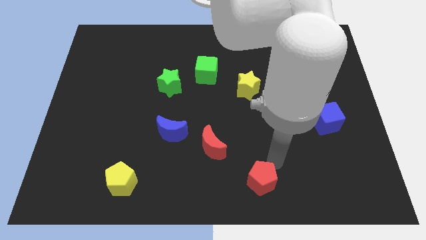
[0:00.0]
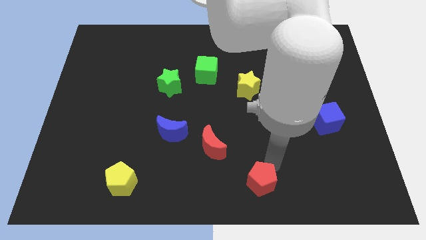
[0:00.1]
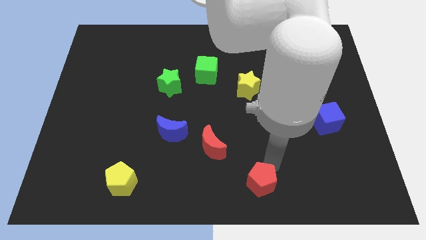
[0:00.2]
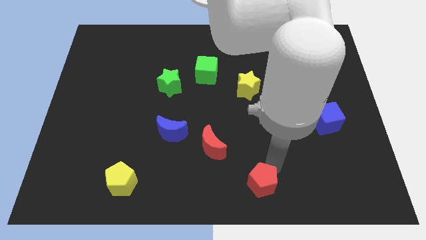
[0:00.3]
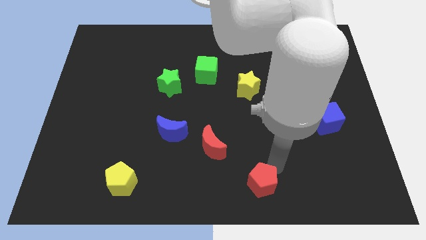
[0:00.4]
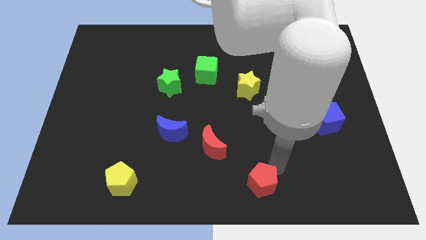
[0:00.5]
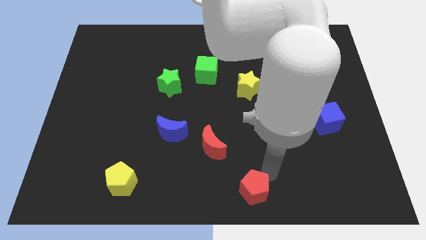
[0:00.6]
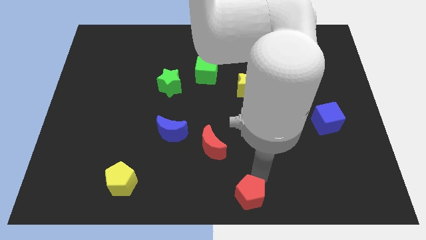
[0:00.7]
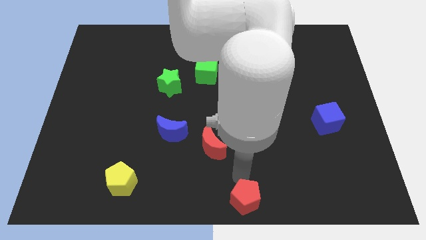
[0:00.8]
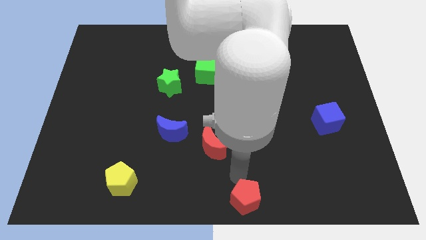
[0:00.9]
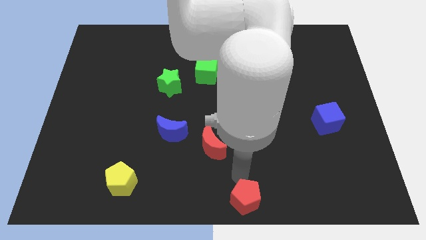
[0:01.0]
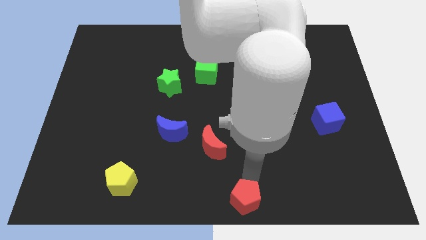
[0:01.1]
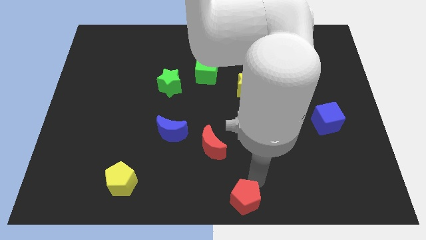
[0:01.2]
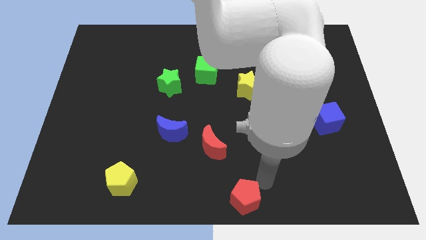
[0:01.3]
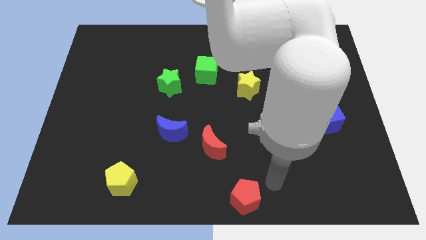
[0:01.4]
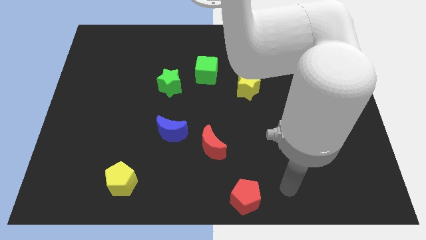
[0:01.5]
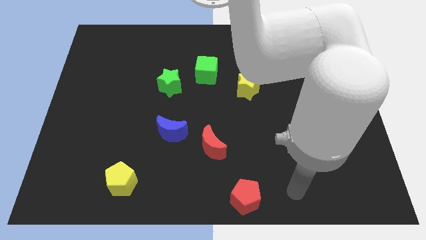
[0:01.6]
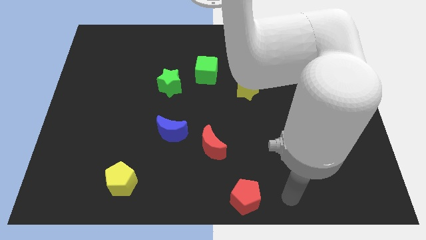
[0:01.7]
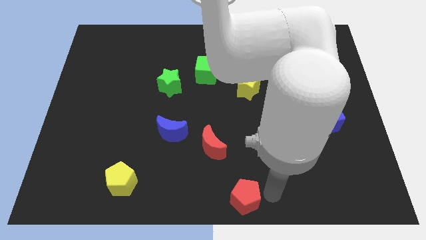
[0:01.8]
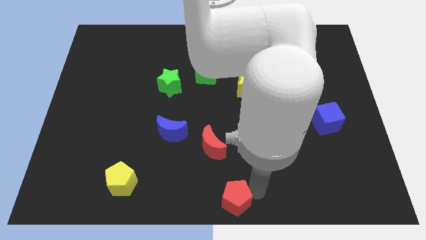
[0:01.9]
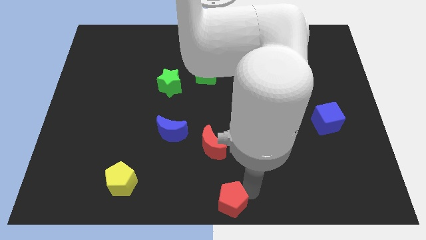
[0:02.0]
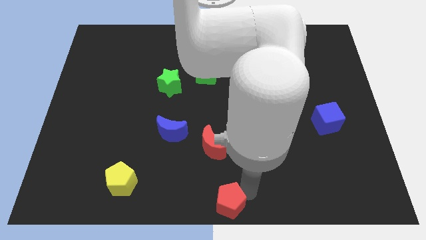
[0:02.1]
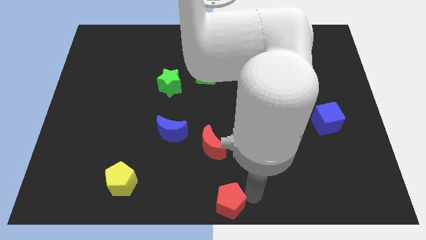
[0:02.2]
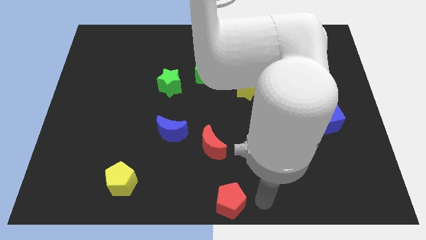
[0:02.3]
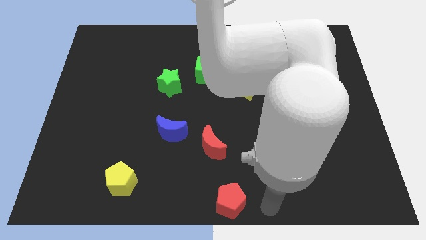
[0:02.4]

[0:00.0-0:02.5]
push the red pentagon to the bottom centre of the board

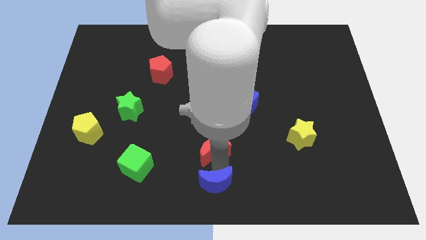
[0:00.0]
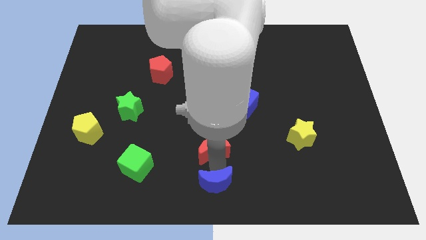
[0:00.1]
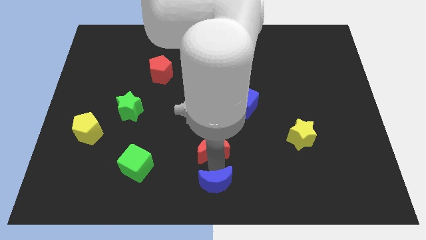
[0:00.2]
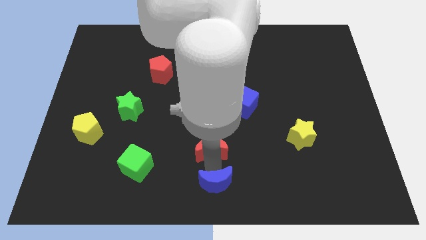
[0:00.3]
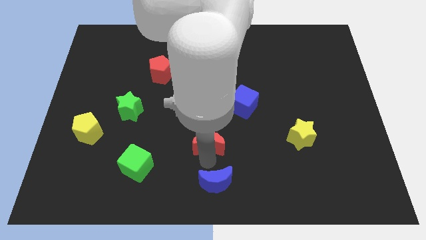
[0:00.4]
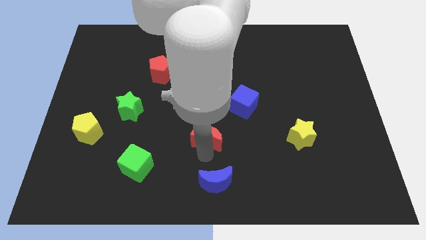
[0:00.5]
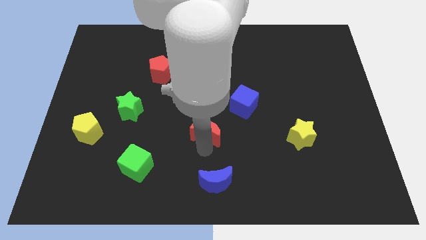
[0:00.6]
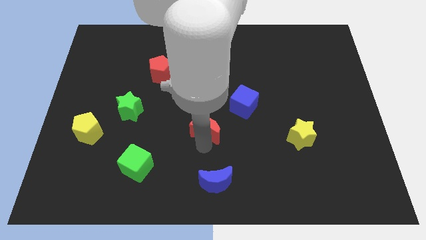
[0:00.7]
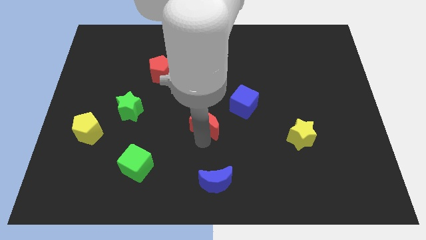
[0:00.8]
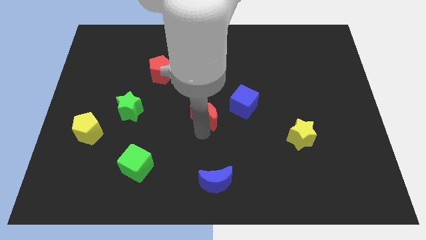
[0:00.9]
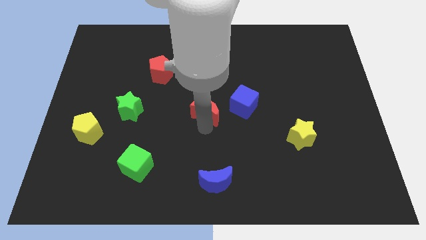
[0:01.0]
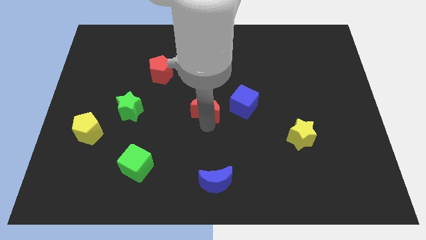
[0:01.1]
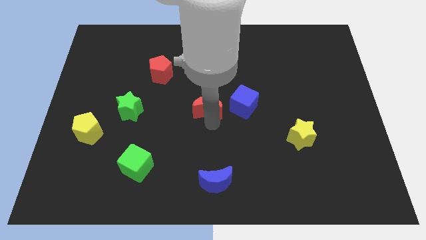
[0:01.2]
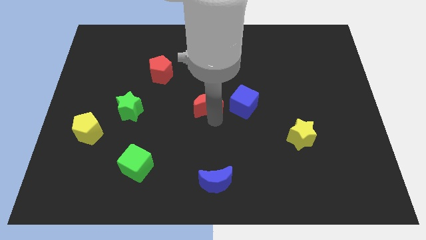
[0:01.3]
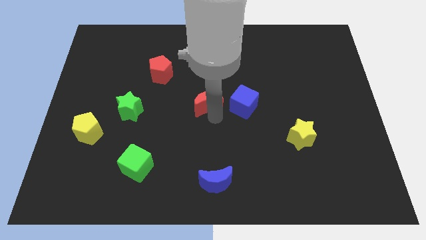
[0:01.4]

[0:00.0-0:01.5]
move the red crescent to the left of the blue cube

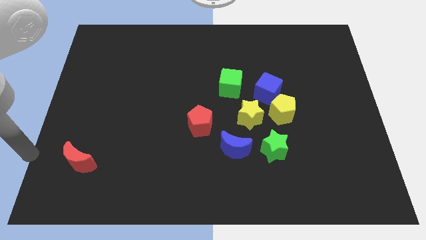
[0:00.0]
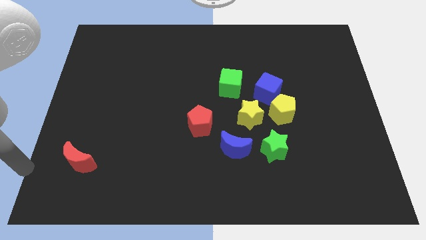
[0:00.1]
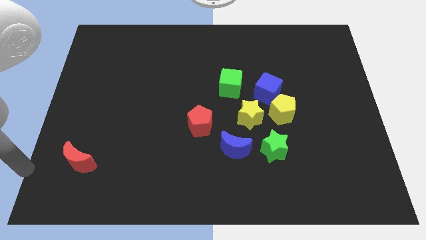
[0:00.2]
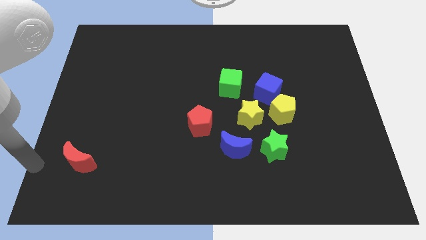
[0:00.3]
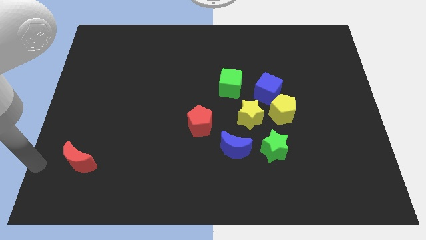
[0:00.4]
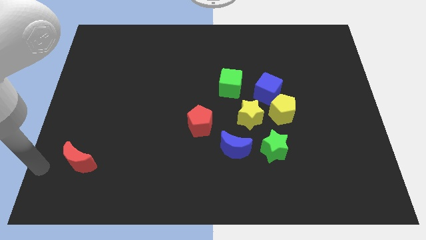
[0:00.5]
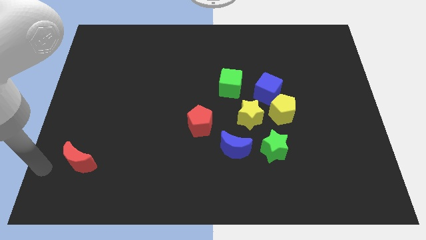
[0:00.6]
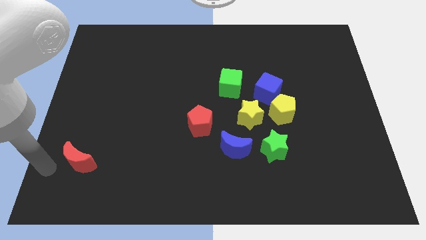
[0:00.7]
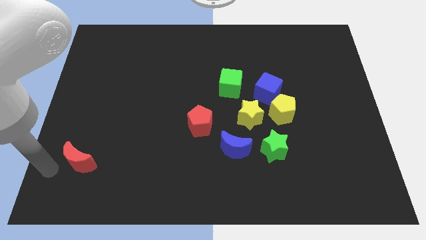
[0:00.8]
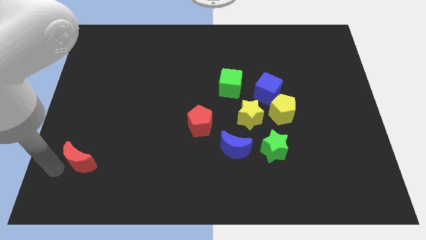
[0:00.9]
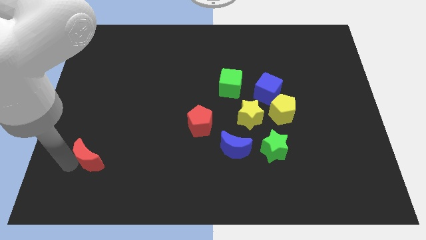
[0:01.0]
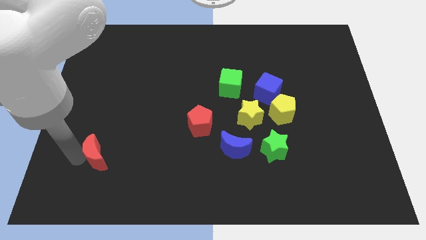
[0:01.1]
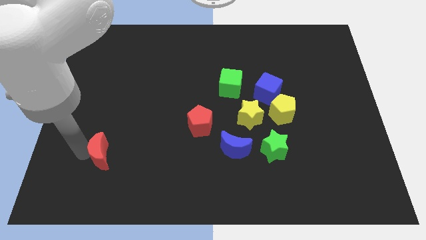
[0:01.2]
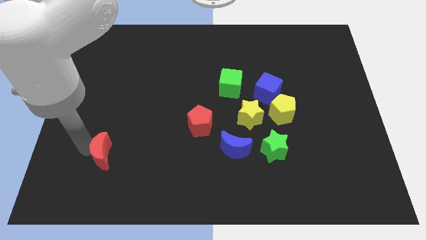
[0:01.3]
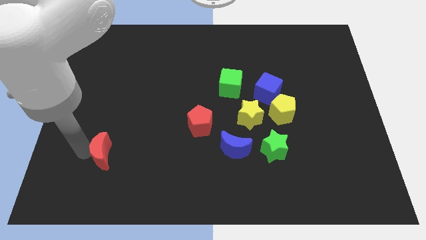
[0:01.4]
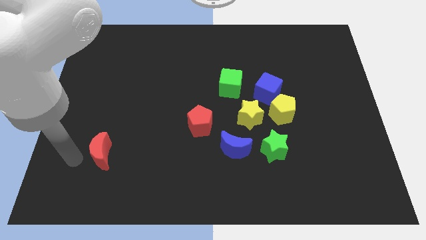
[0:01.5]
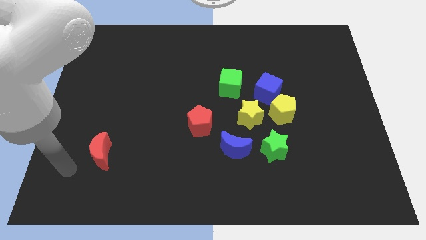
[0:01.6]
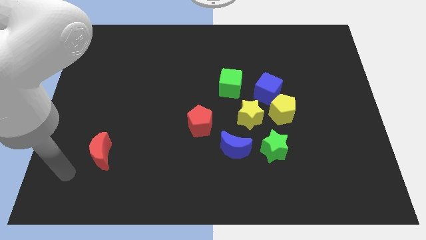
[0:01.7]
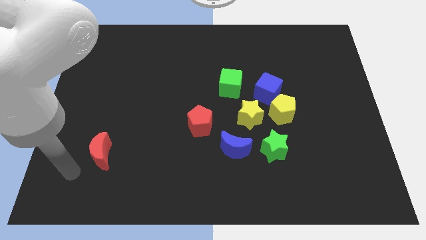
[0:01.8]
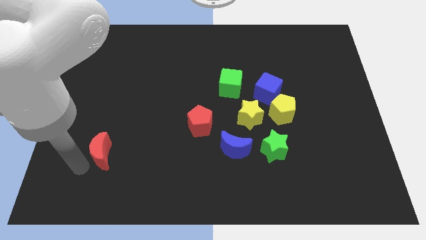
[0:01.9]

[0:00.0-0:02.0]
move the red crescent to the right of the board

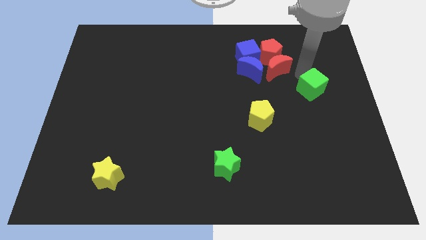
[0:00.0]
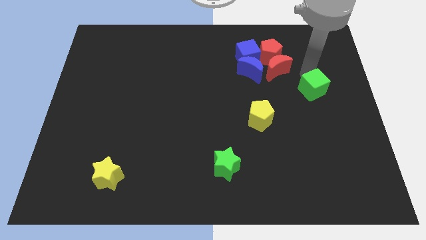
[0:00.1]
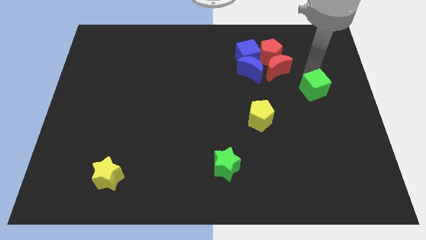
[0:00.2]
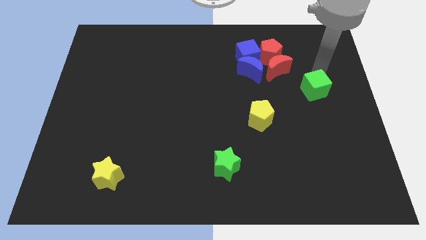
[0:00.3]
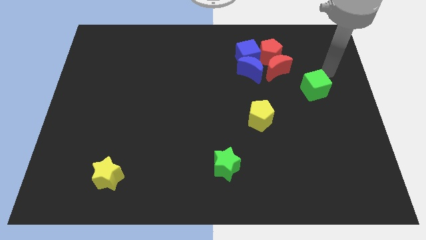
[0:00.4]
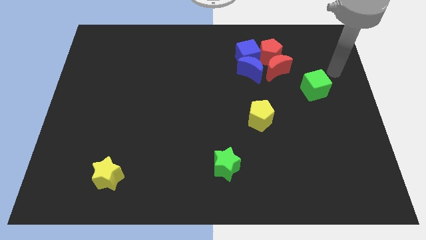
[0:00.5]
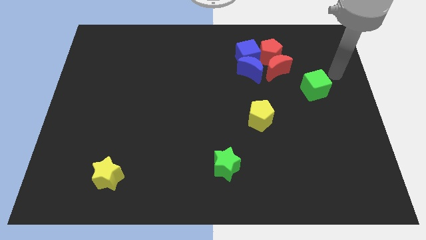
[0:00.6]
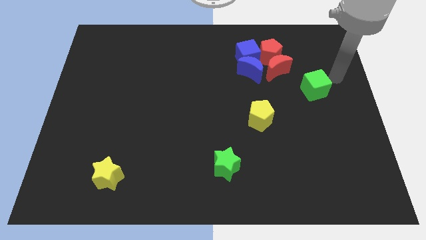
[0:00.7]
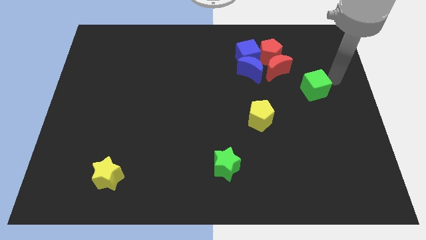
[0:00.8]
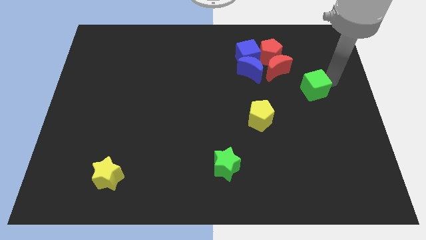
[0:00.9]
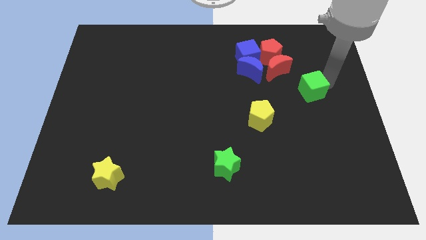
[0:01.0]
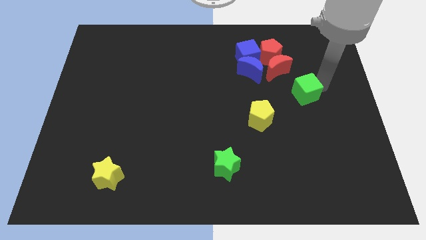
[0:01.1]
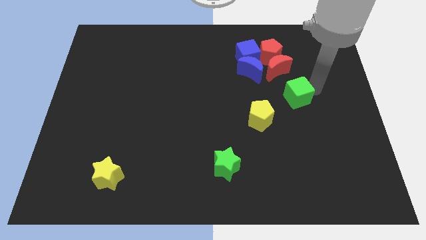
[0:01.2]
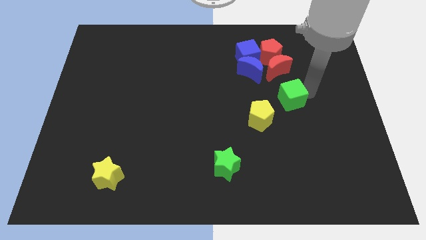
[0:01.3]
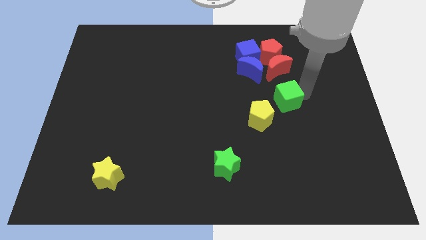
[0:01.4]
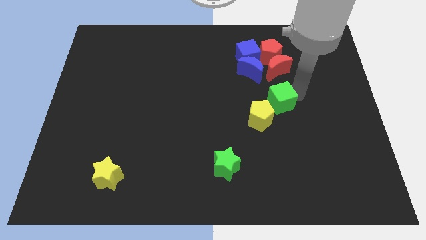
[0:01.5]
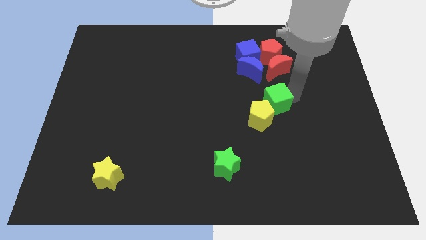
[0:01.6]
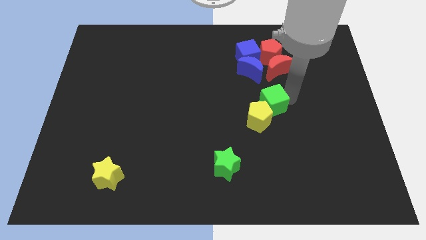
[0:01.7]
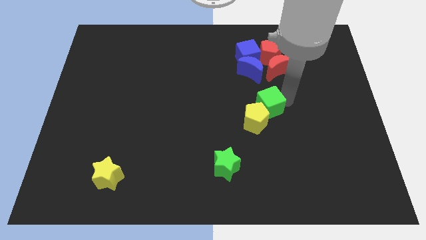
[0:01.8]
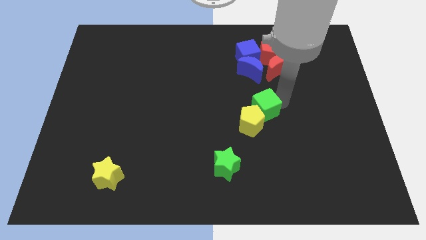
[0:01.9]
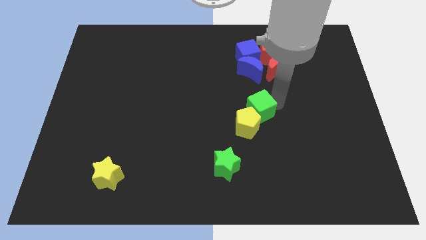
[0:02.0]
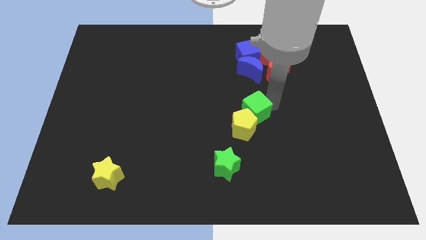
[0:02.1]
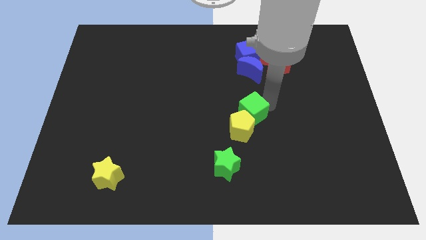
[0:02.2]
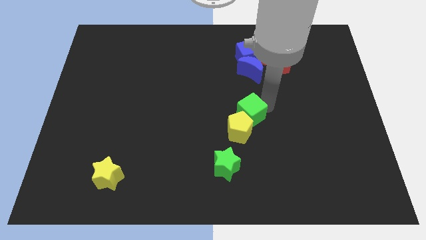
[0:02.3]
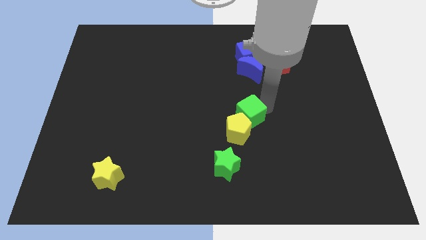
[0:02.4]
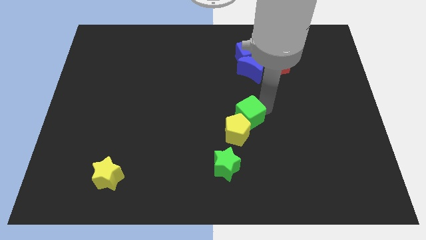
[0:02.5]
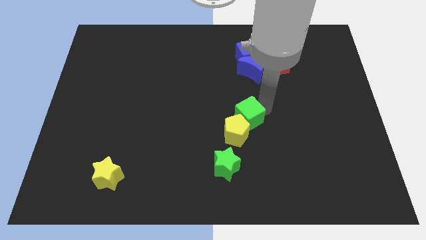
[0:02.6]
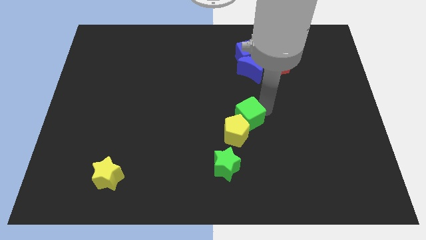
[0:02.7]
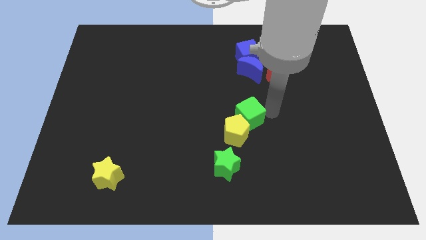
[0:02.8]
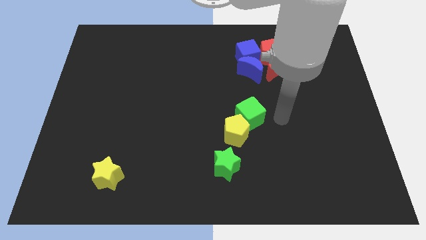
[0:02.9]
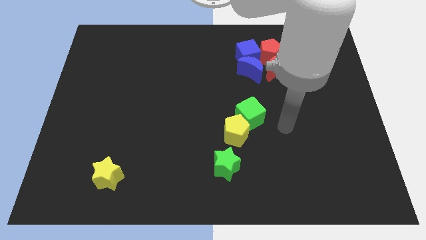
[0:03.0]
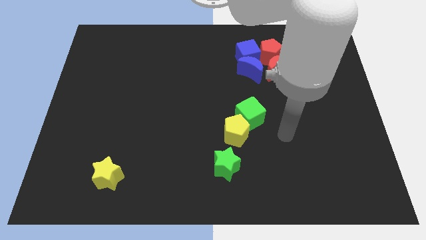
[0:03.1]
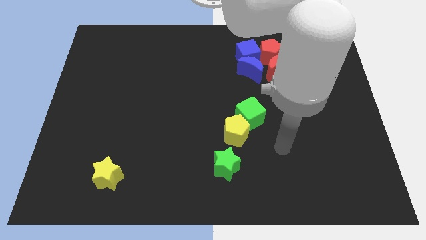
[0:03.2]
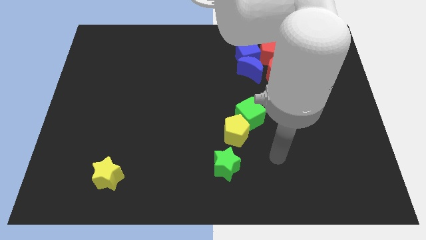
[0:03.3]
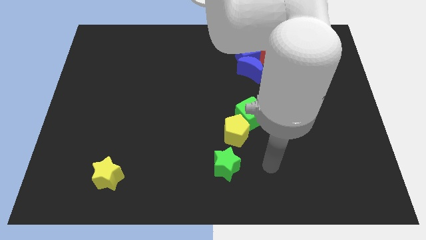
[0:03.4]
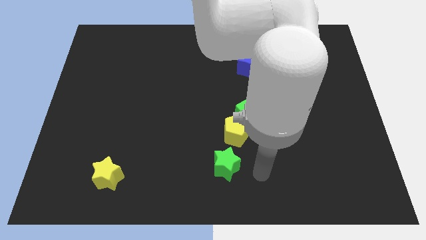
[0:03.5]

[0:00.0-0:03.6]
move the green cube to the top right of the yellow pentagon
